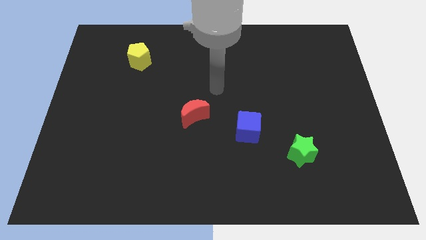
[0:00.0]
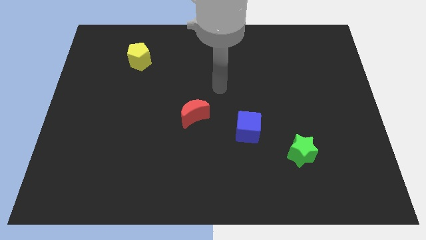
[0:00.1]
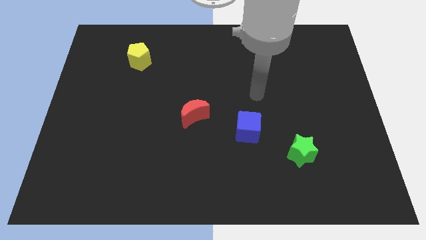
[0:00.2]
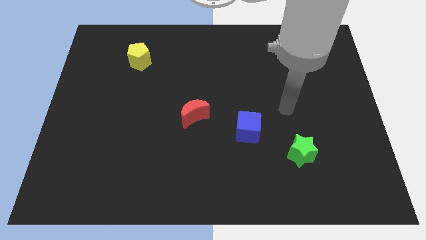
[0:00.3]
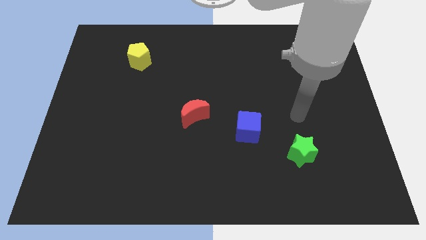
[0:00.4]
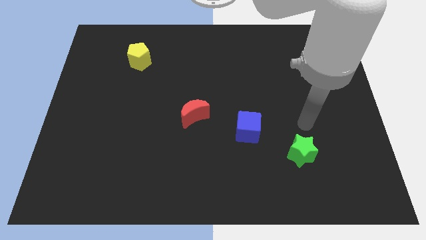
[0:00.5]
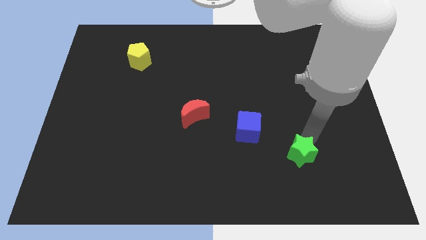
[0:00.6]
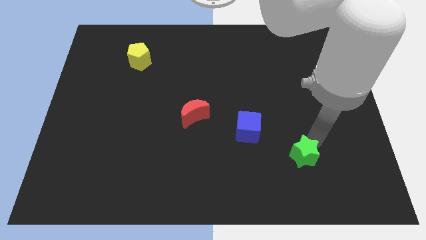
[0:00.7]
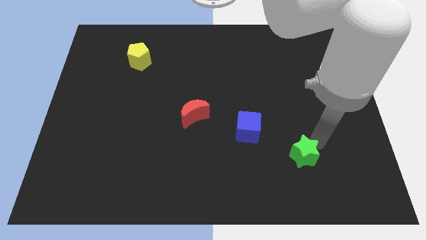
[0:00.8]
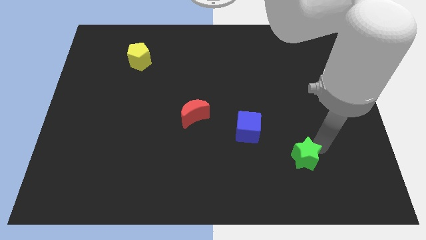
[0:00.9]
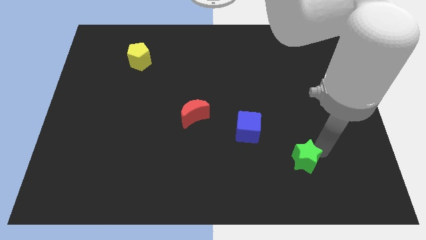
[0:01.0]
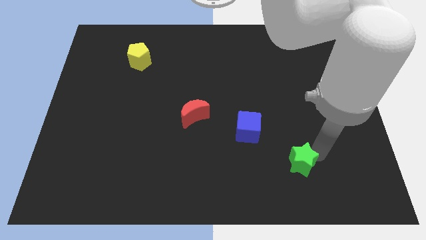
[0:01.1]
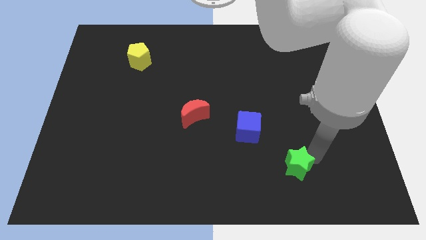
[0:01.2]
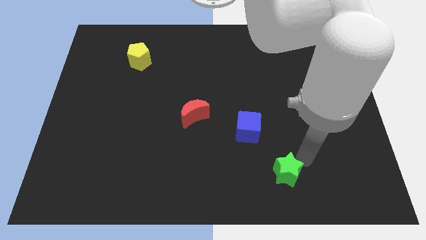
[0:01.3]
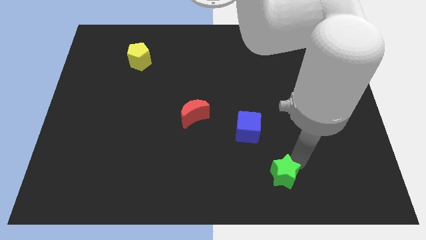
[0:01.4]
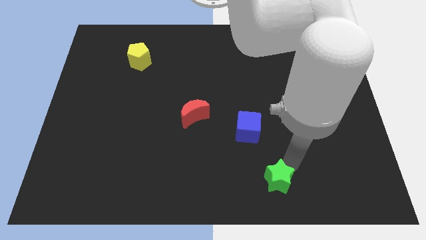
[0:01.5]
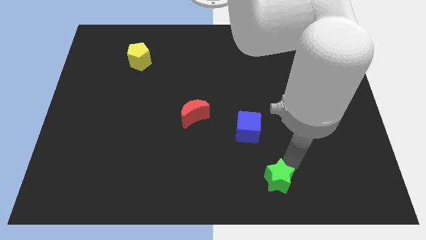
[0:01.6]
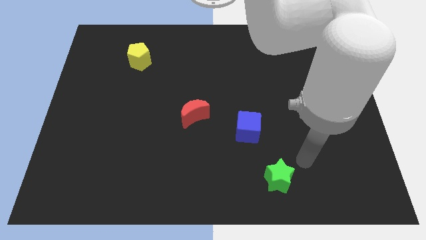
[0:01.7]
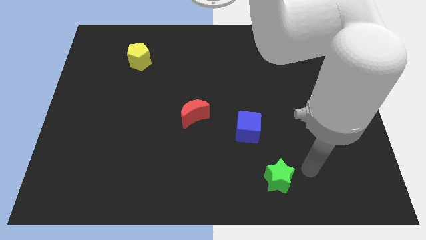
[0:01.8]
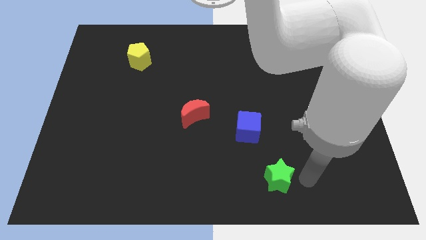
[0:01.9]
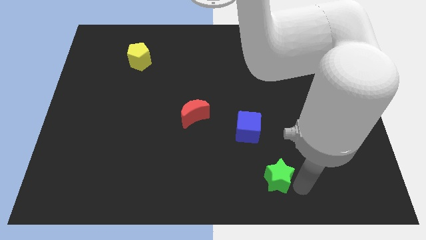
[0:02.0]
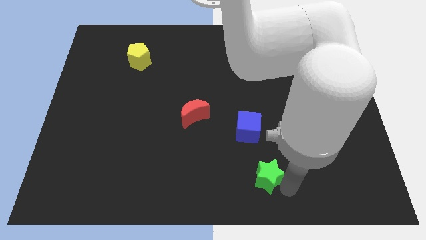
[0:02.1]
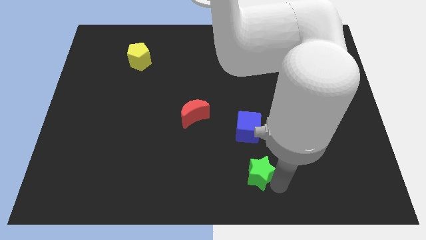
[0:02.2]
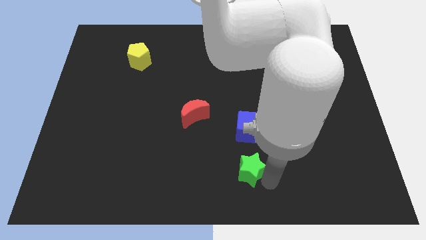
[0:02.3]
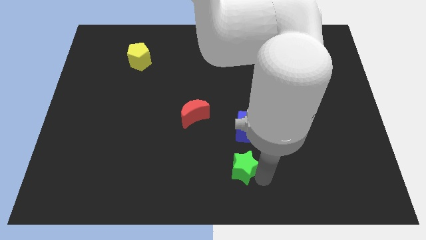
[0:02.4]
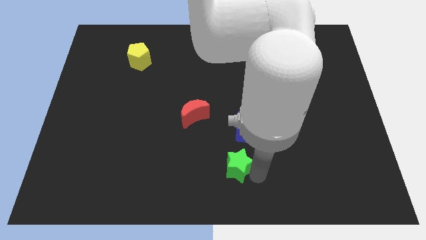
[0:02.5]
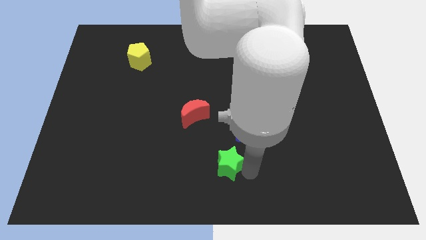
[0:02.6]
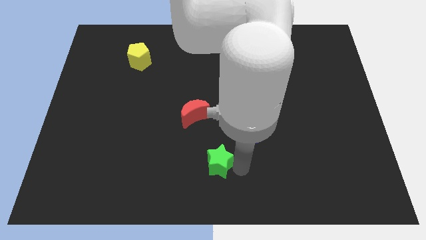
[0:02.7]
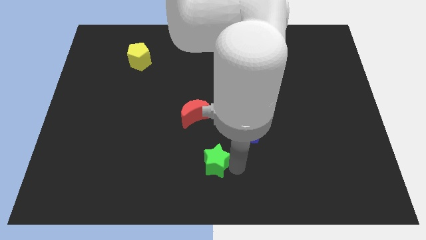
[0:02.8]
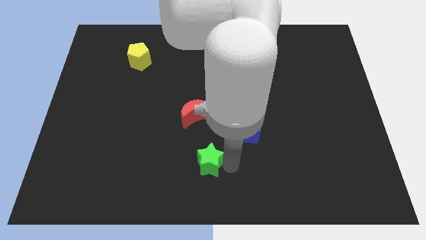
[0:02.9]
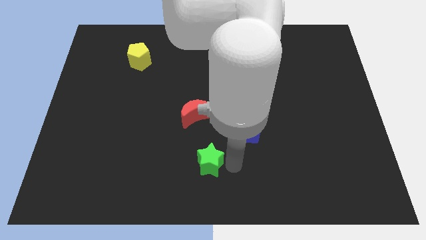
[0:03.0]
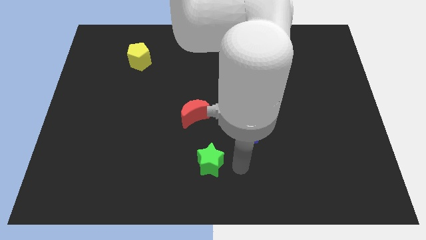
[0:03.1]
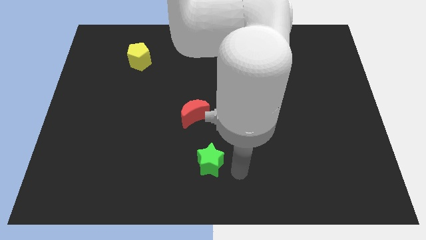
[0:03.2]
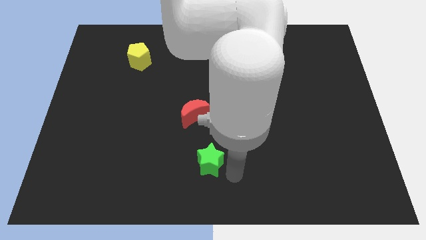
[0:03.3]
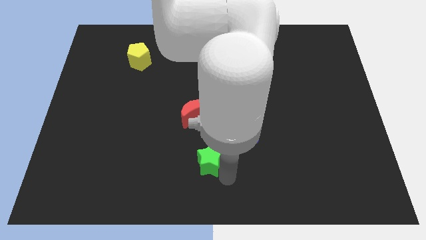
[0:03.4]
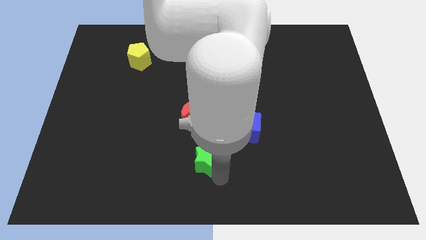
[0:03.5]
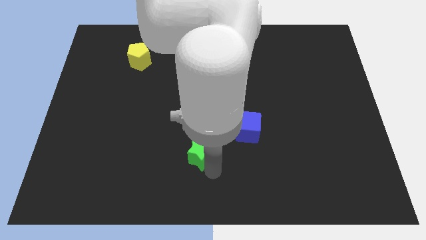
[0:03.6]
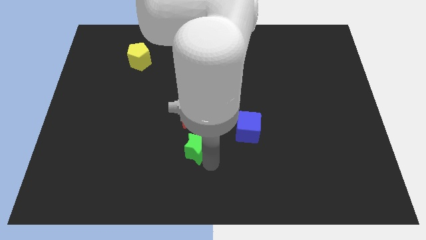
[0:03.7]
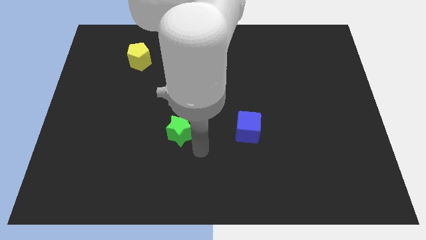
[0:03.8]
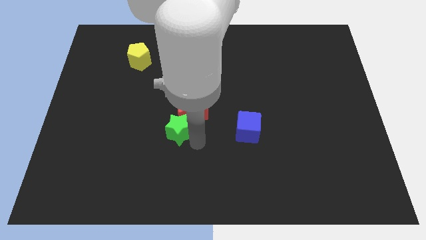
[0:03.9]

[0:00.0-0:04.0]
put the green star next to the red block

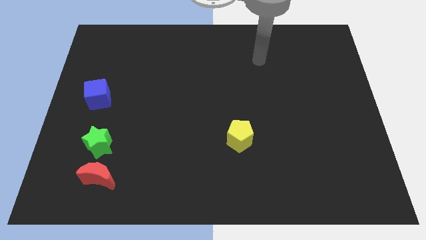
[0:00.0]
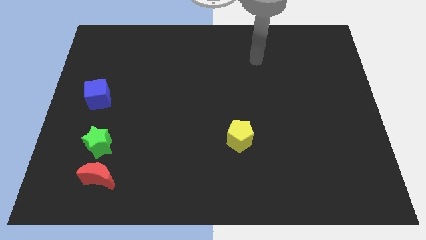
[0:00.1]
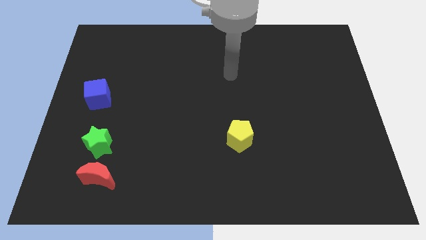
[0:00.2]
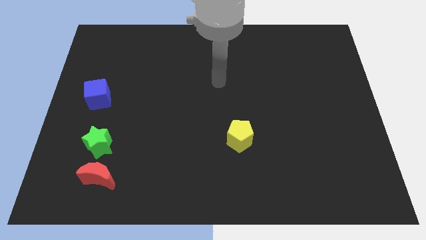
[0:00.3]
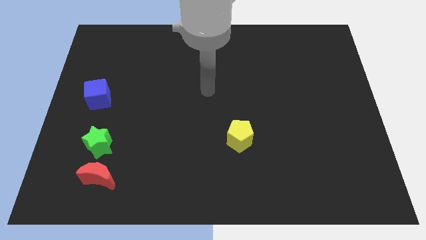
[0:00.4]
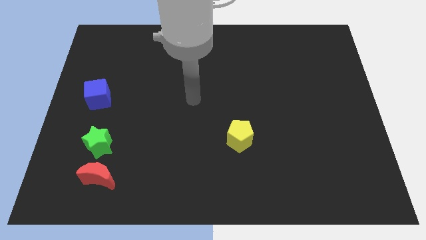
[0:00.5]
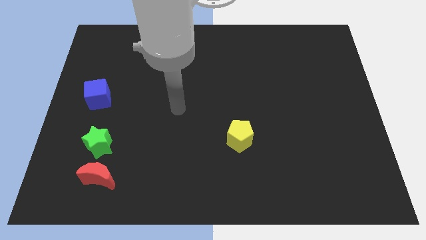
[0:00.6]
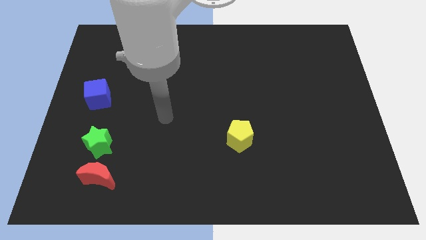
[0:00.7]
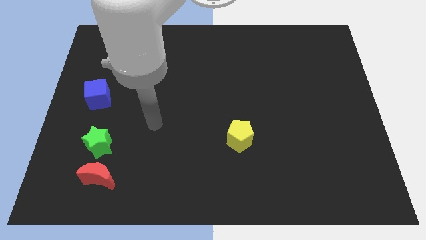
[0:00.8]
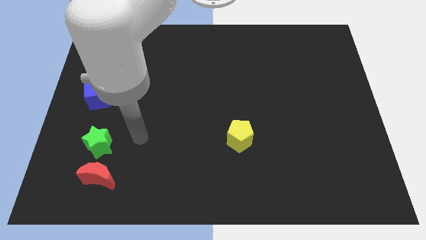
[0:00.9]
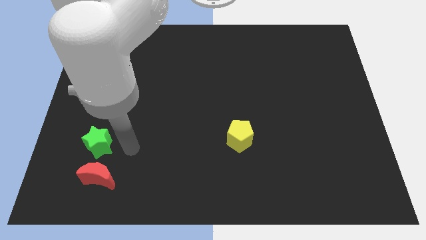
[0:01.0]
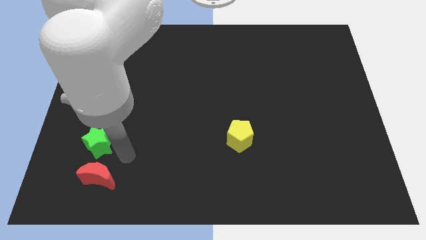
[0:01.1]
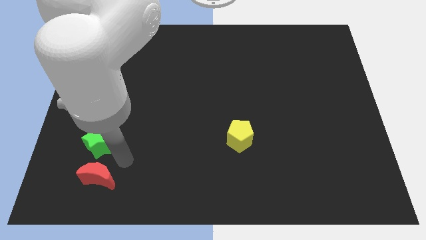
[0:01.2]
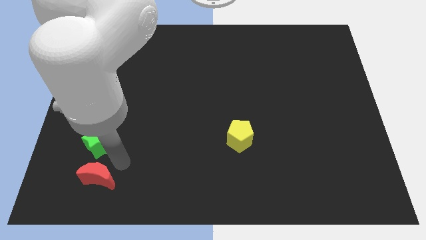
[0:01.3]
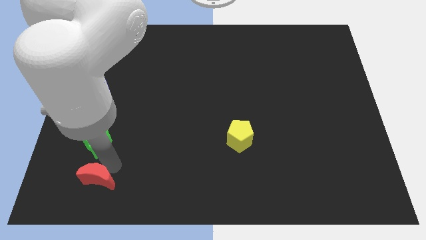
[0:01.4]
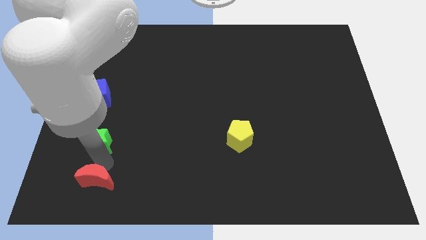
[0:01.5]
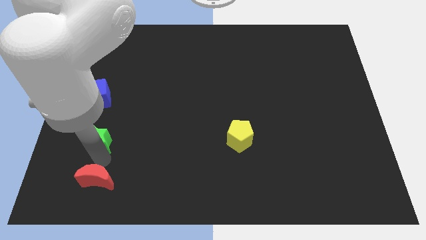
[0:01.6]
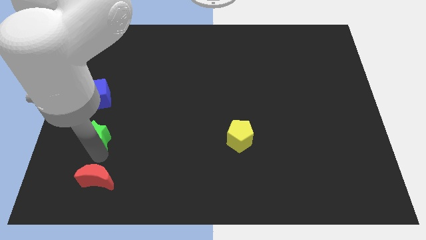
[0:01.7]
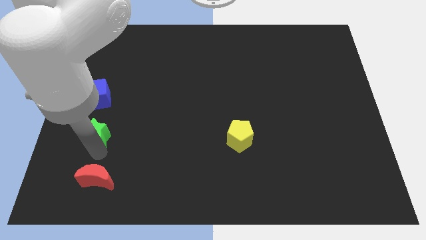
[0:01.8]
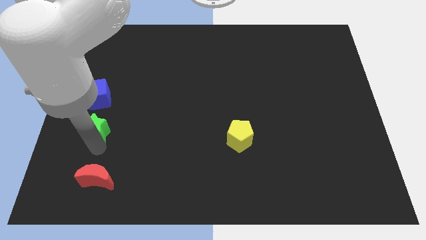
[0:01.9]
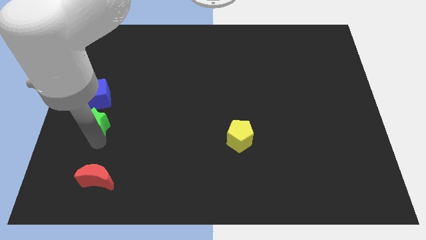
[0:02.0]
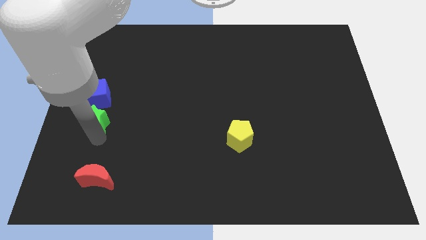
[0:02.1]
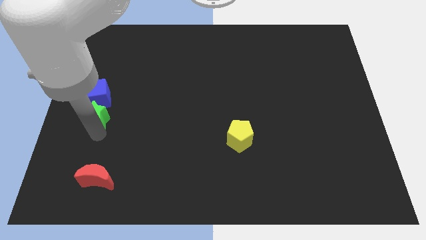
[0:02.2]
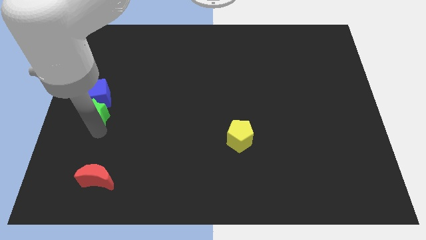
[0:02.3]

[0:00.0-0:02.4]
slide the green star towards the cube

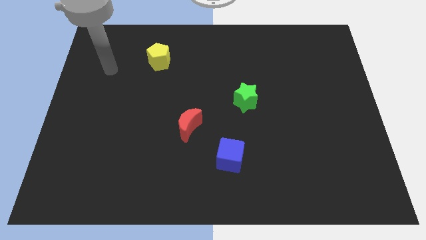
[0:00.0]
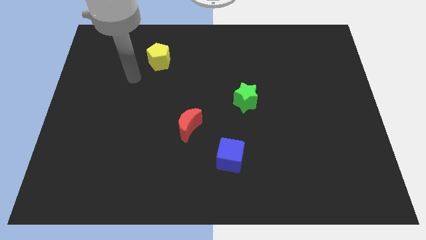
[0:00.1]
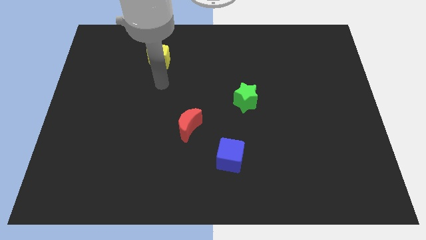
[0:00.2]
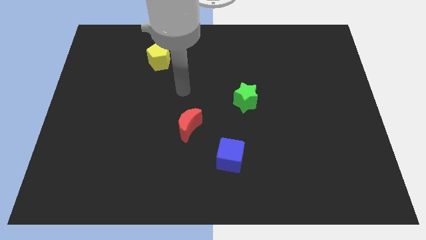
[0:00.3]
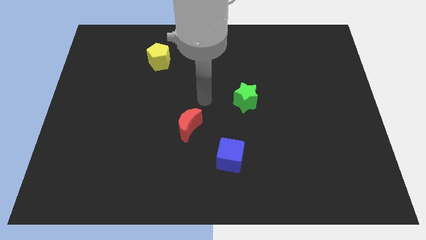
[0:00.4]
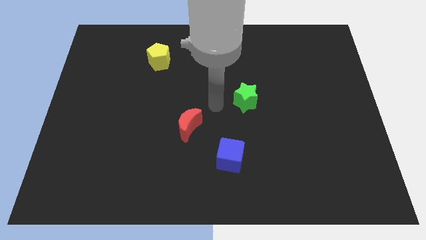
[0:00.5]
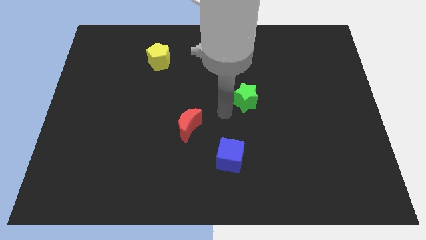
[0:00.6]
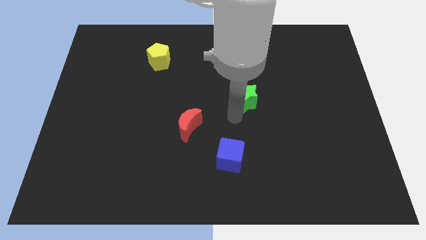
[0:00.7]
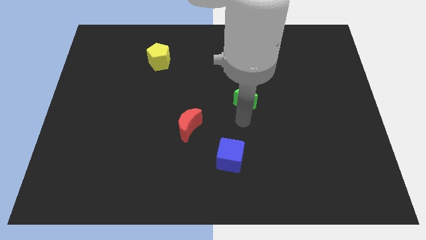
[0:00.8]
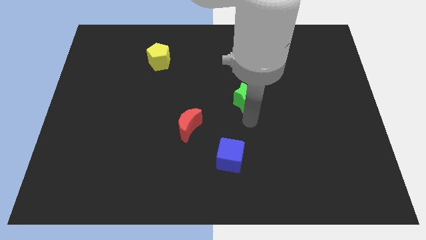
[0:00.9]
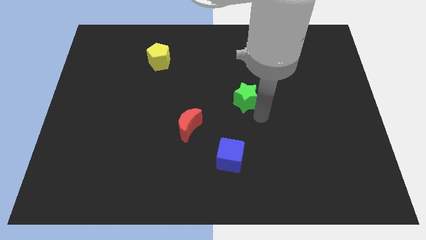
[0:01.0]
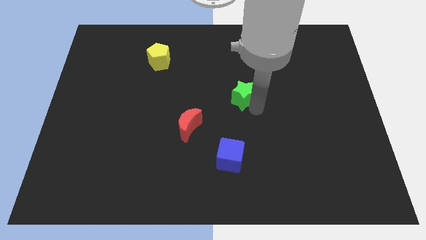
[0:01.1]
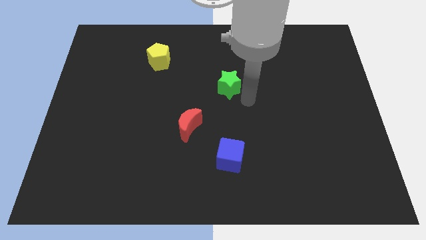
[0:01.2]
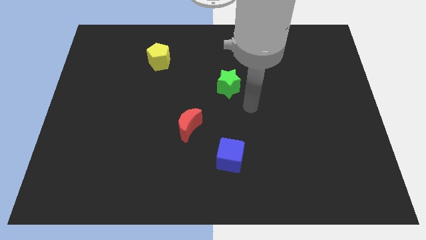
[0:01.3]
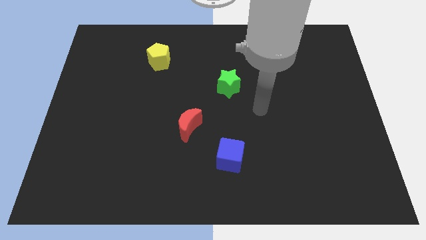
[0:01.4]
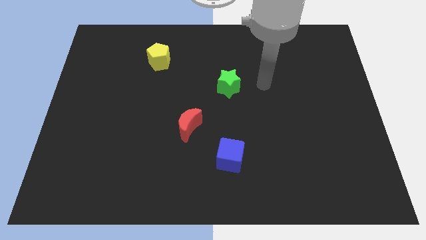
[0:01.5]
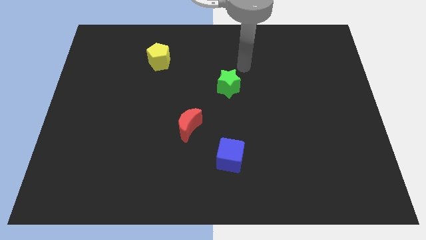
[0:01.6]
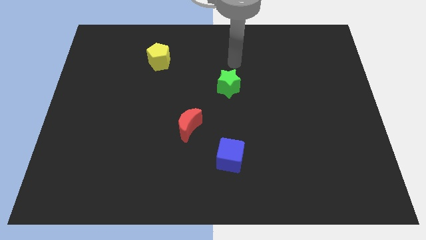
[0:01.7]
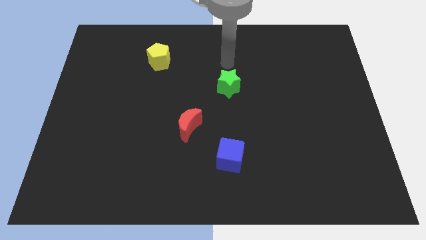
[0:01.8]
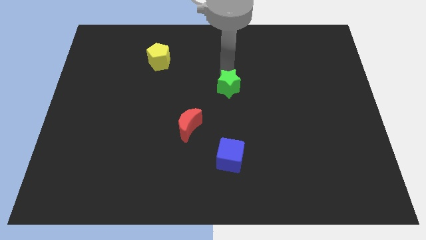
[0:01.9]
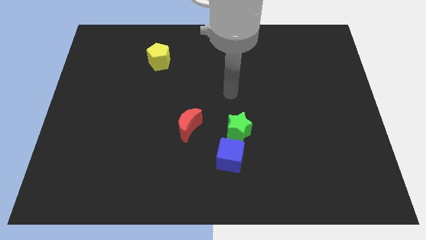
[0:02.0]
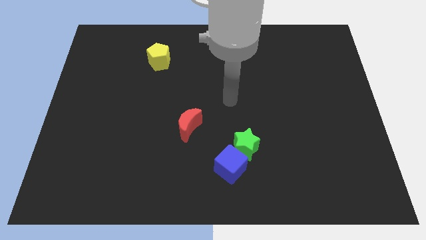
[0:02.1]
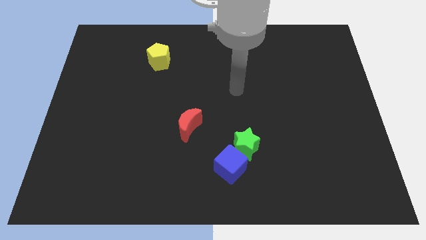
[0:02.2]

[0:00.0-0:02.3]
move the star to the blue cube
